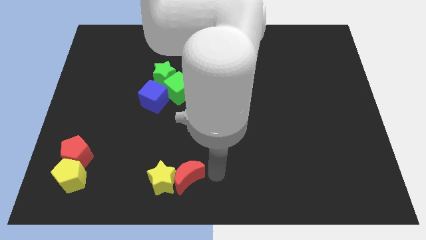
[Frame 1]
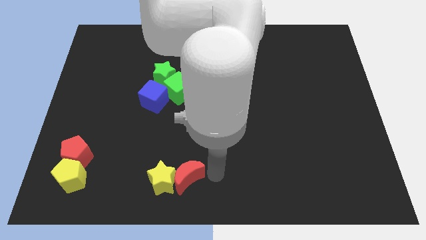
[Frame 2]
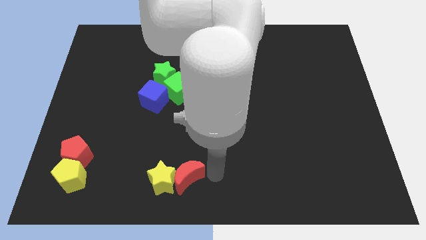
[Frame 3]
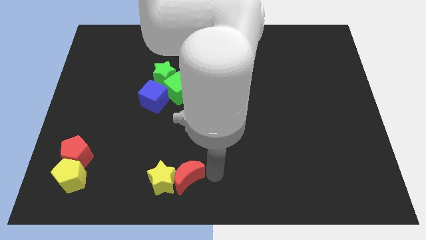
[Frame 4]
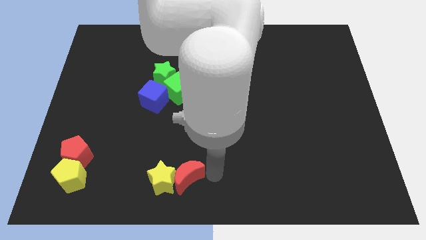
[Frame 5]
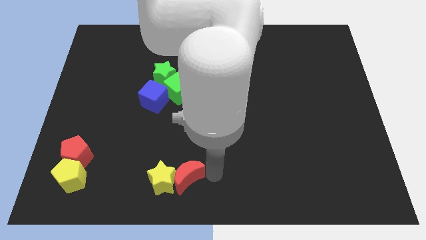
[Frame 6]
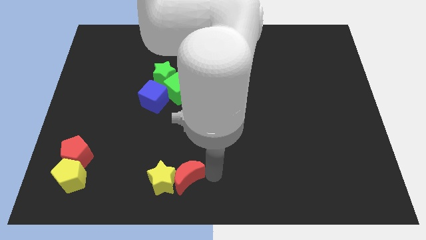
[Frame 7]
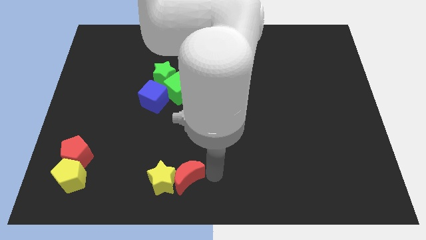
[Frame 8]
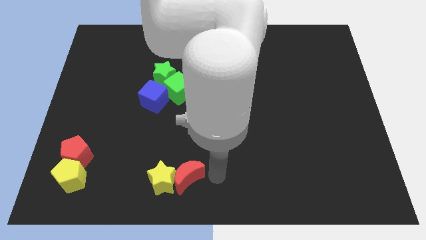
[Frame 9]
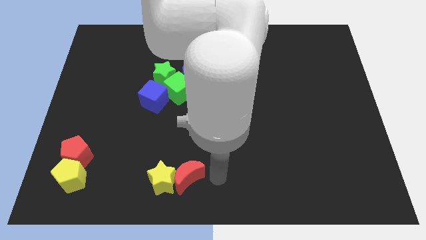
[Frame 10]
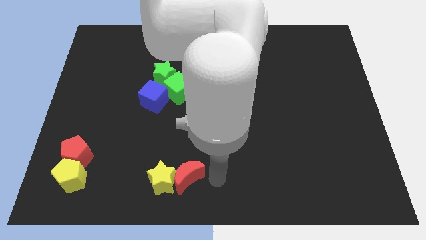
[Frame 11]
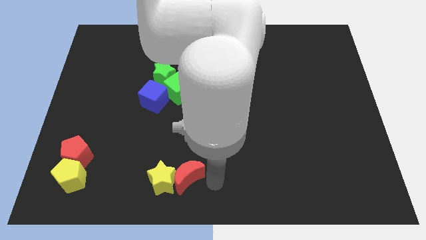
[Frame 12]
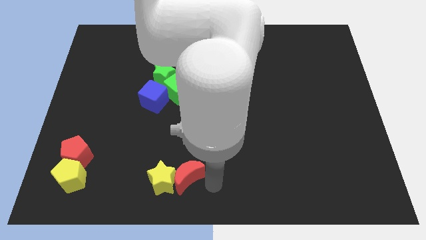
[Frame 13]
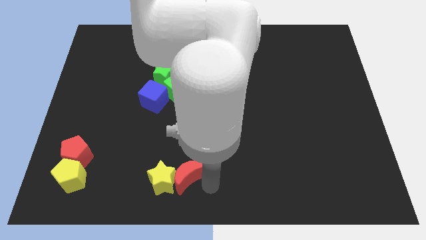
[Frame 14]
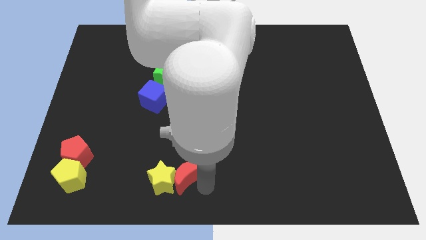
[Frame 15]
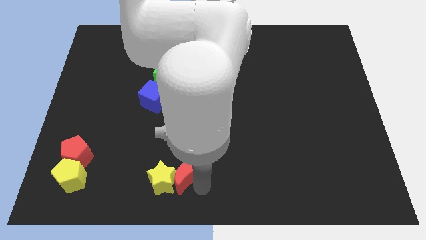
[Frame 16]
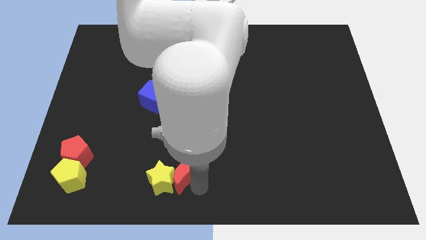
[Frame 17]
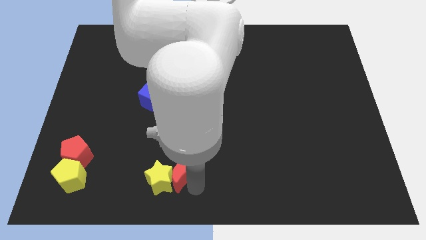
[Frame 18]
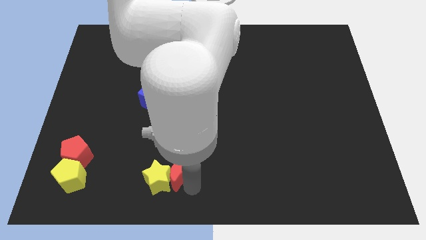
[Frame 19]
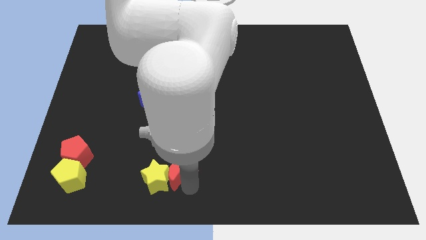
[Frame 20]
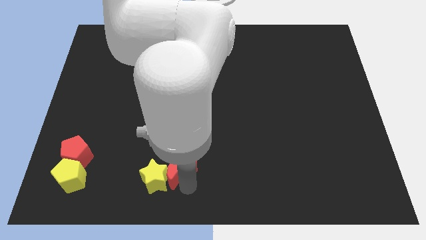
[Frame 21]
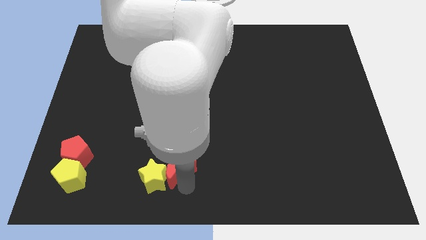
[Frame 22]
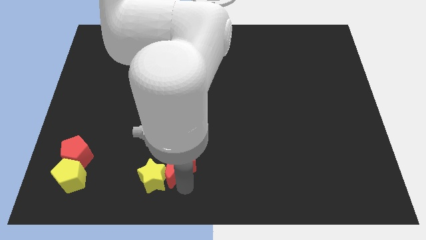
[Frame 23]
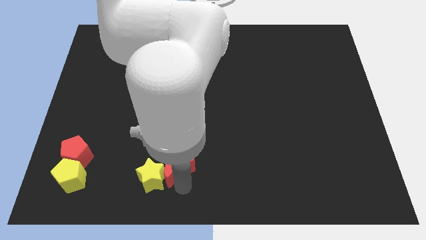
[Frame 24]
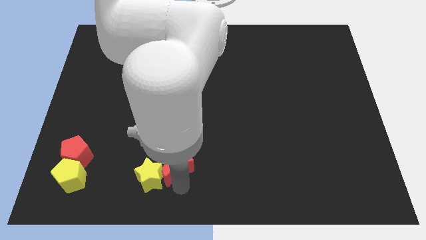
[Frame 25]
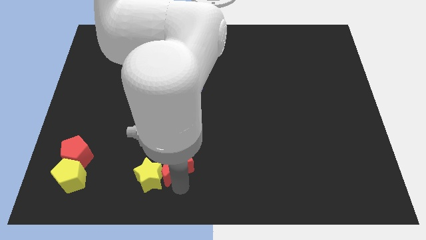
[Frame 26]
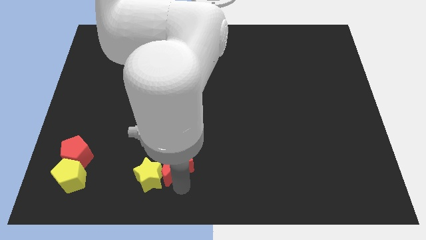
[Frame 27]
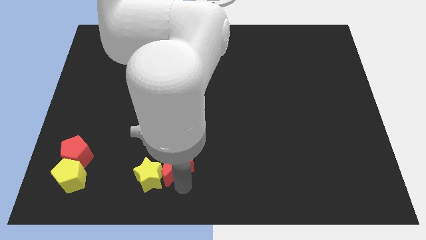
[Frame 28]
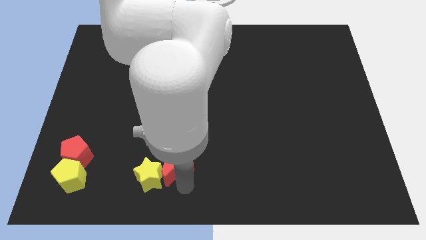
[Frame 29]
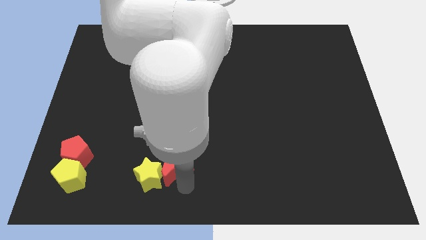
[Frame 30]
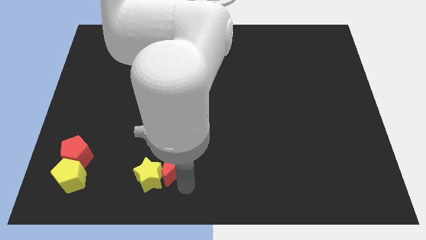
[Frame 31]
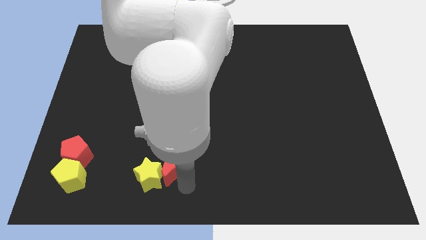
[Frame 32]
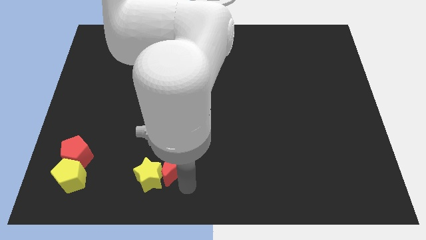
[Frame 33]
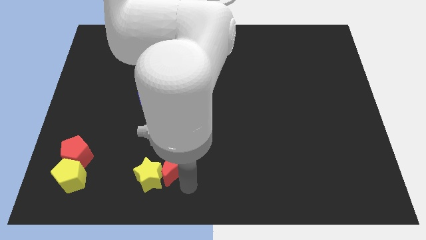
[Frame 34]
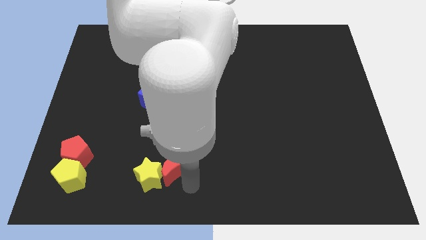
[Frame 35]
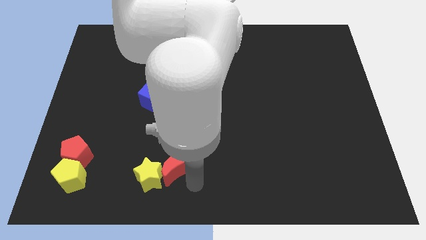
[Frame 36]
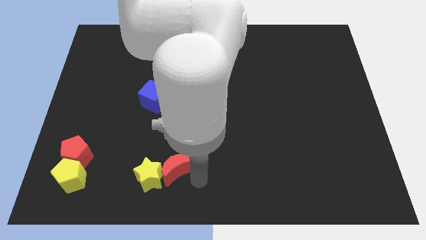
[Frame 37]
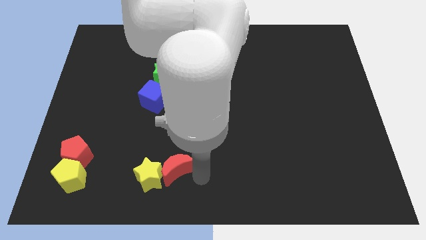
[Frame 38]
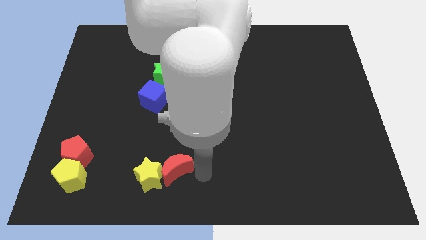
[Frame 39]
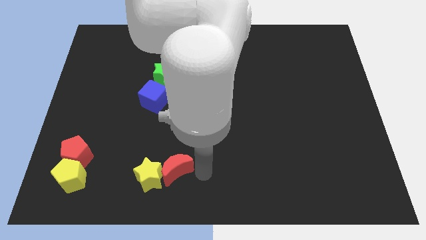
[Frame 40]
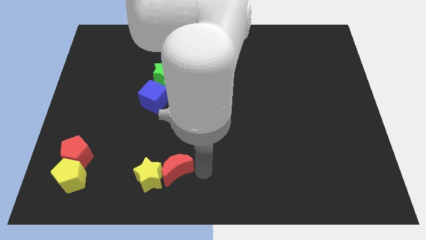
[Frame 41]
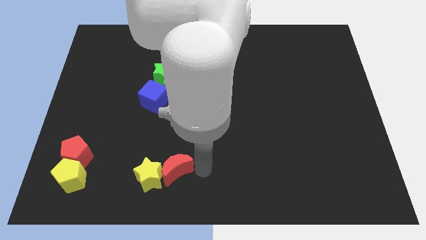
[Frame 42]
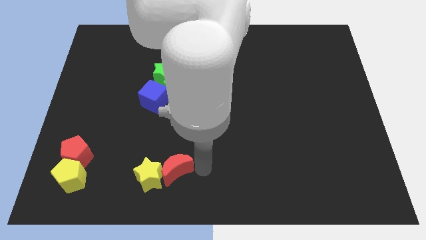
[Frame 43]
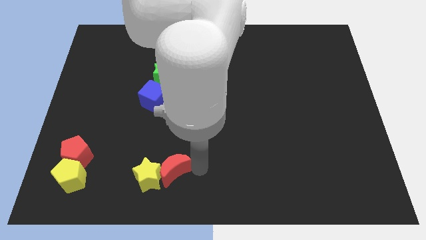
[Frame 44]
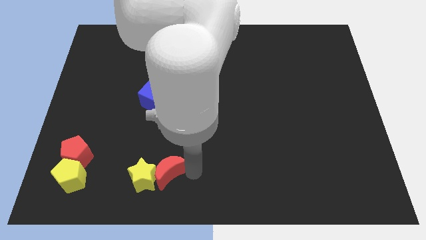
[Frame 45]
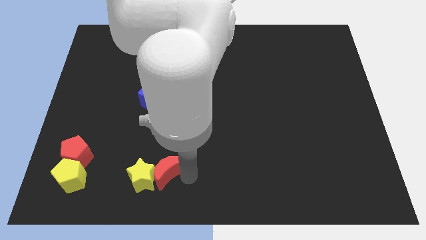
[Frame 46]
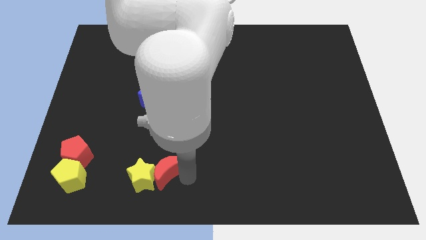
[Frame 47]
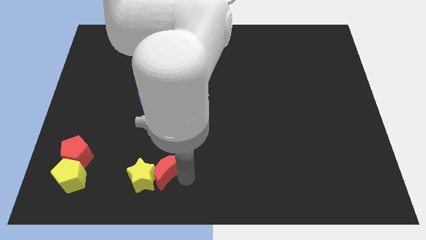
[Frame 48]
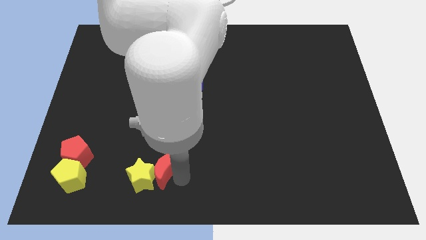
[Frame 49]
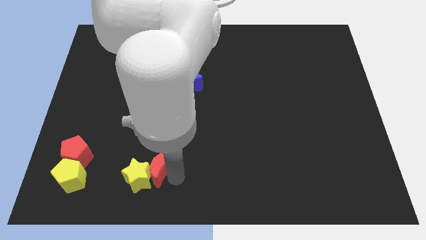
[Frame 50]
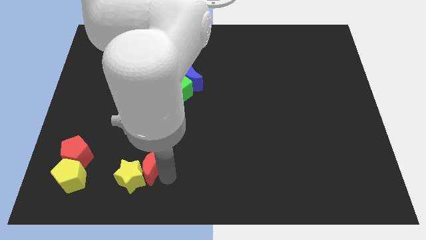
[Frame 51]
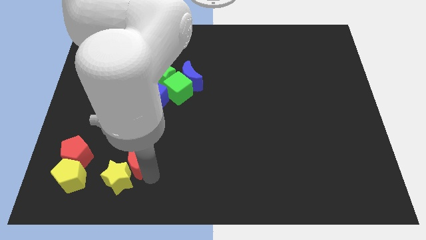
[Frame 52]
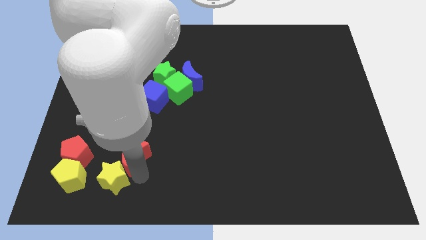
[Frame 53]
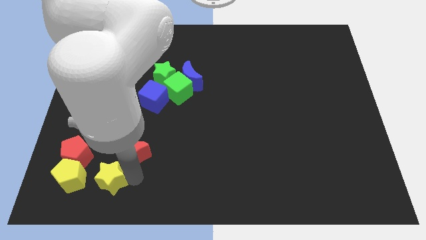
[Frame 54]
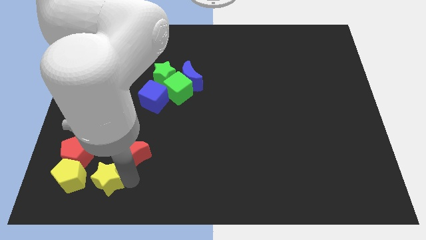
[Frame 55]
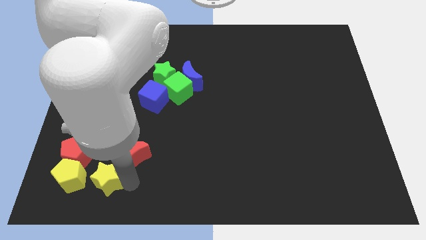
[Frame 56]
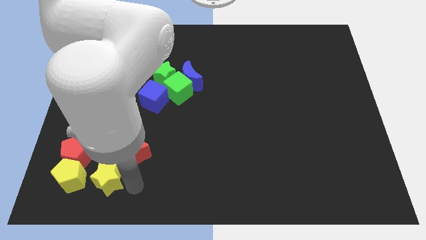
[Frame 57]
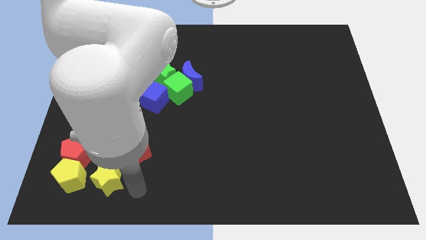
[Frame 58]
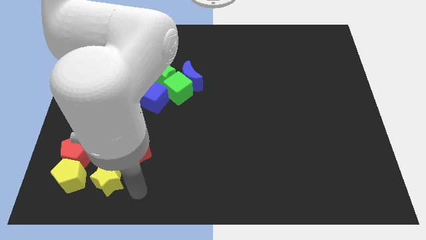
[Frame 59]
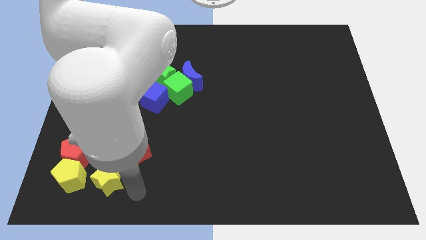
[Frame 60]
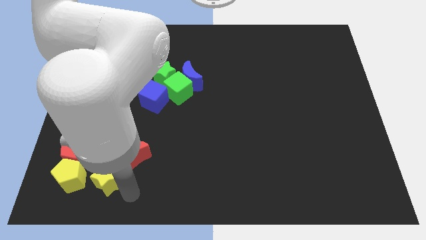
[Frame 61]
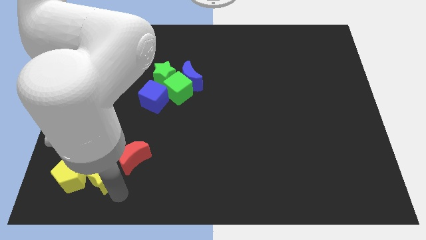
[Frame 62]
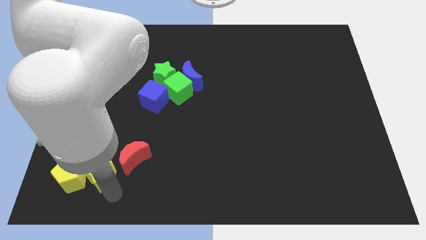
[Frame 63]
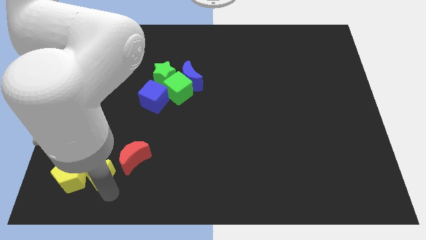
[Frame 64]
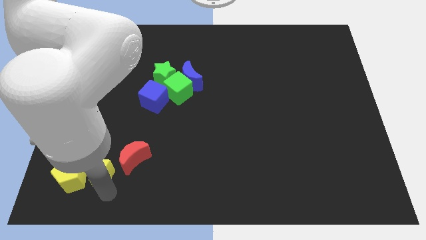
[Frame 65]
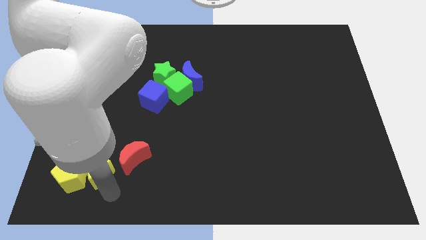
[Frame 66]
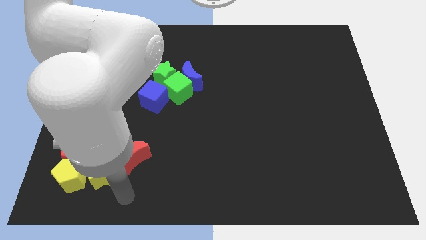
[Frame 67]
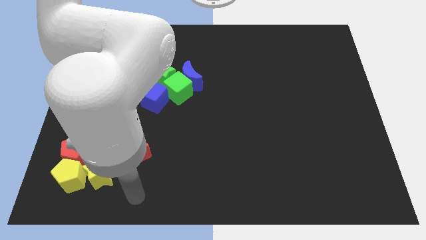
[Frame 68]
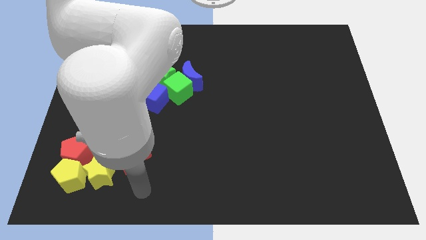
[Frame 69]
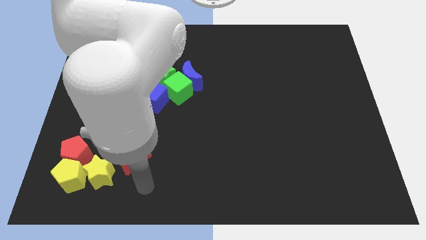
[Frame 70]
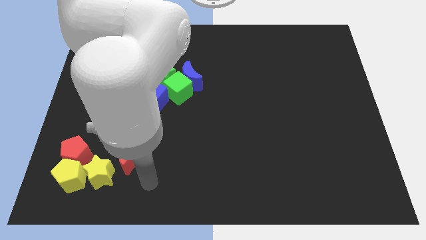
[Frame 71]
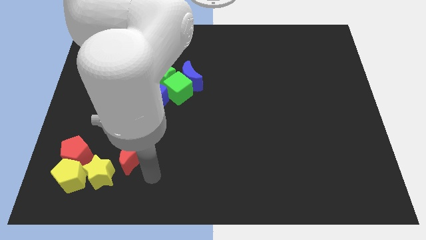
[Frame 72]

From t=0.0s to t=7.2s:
push the yellow star towards the bottom left corner of the board

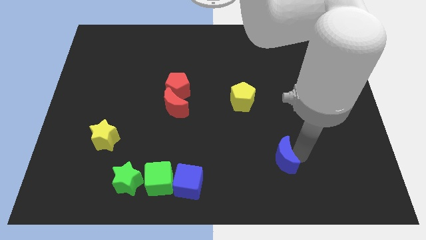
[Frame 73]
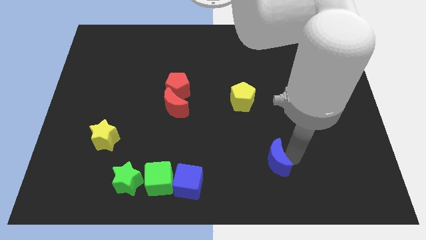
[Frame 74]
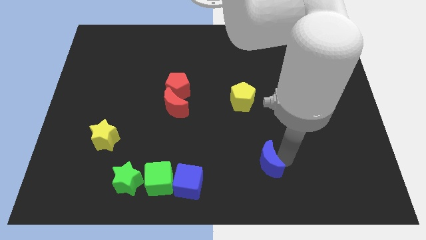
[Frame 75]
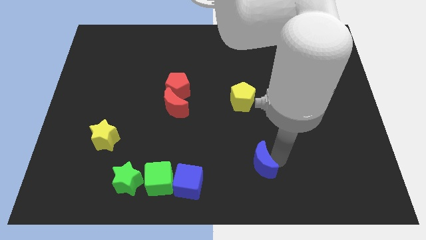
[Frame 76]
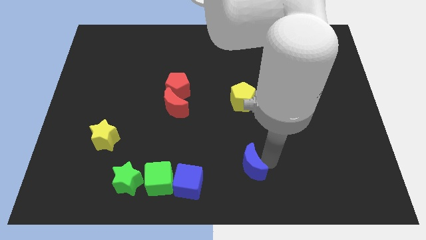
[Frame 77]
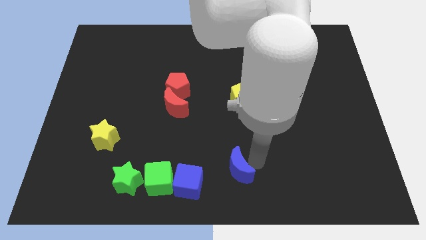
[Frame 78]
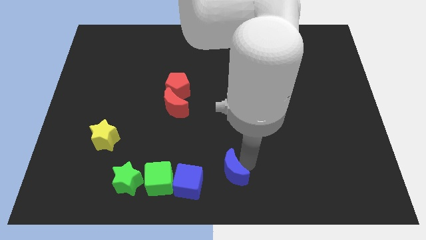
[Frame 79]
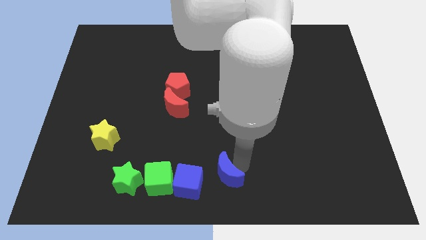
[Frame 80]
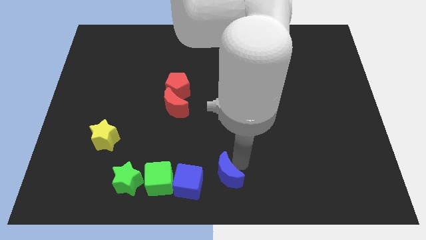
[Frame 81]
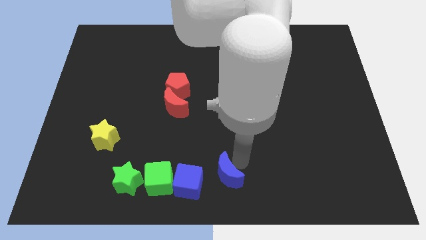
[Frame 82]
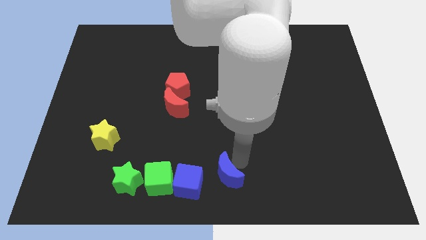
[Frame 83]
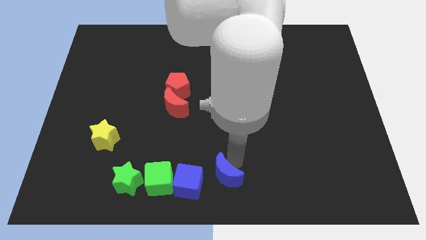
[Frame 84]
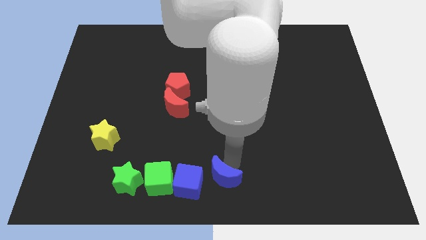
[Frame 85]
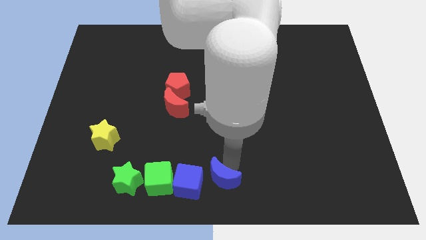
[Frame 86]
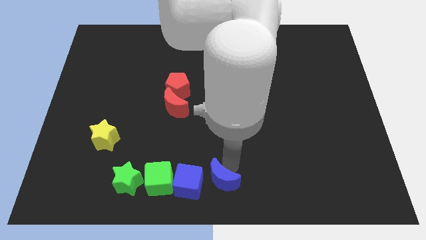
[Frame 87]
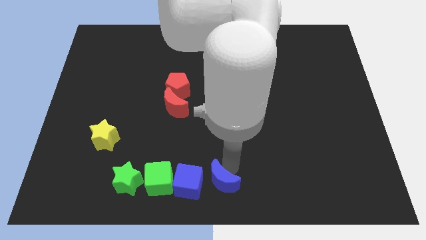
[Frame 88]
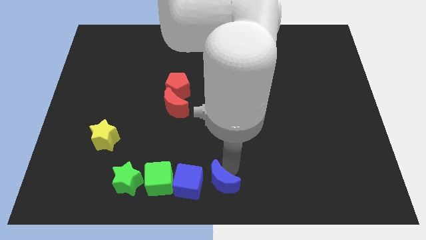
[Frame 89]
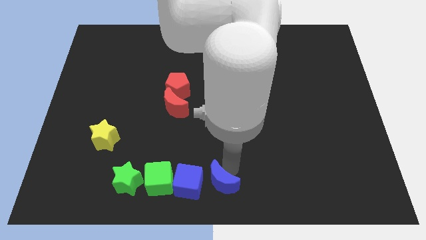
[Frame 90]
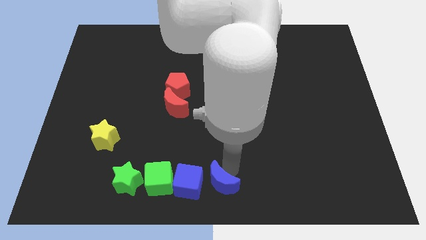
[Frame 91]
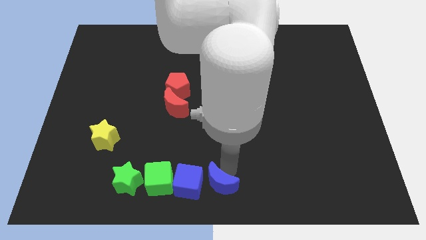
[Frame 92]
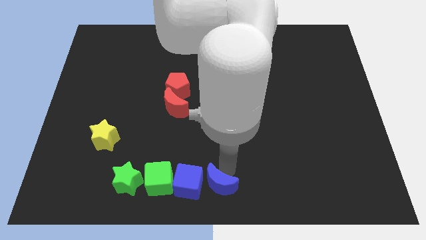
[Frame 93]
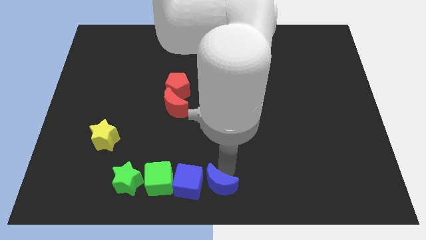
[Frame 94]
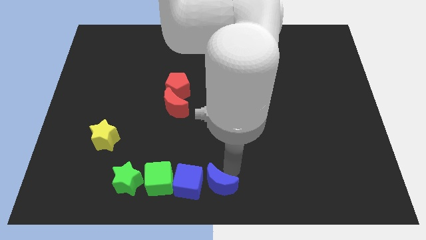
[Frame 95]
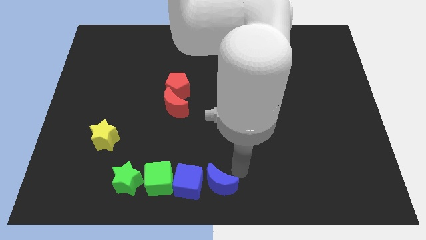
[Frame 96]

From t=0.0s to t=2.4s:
slide the blue moon right to the blue cube
